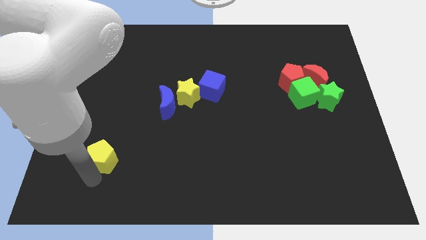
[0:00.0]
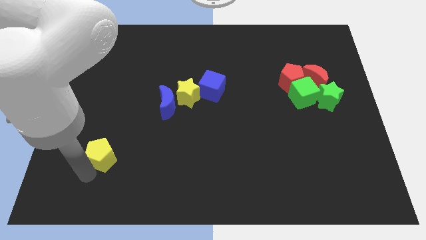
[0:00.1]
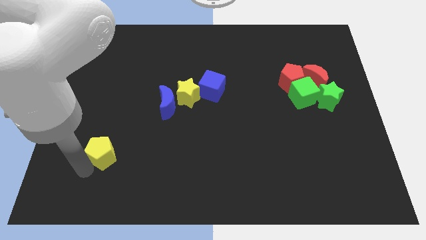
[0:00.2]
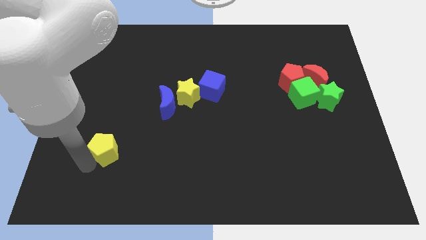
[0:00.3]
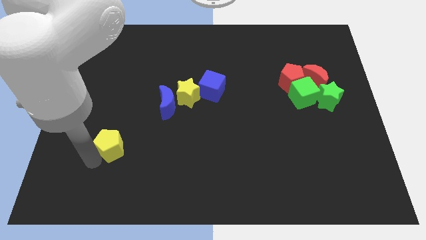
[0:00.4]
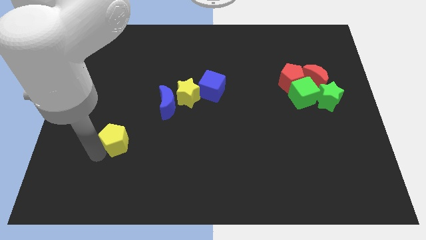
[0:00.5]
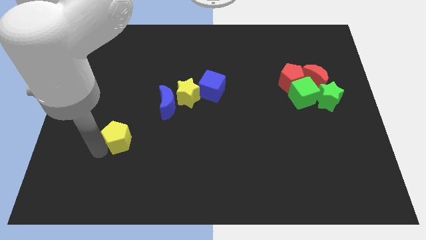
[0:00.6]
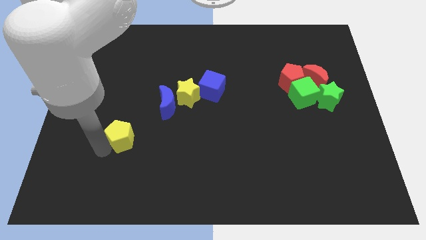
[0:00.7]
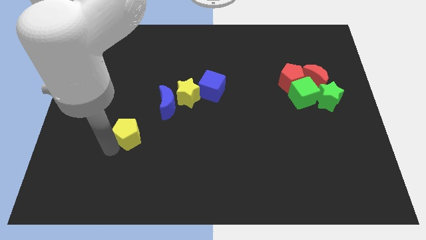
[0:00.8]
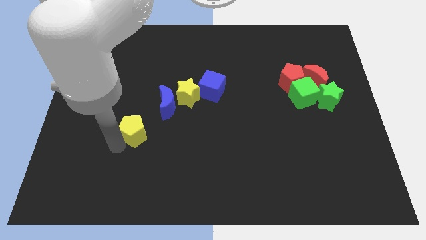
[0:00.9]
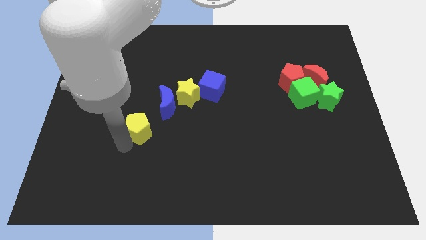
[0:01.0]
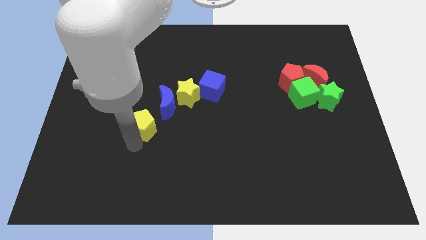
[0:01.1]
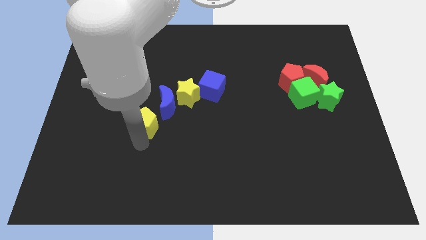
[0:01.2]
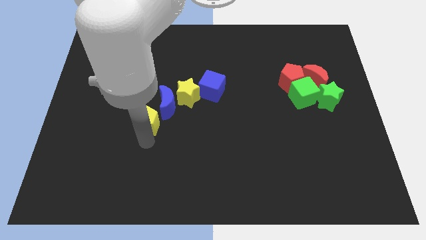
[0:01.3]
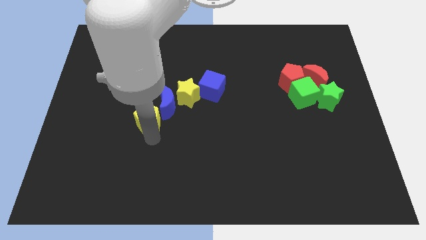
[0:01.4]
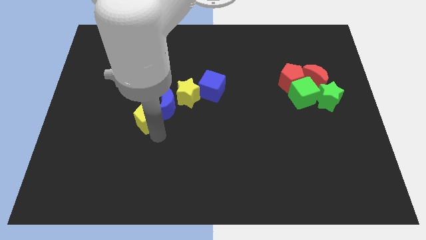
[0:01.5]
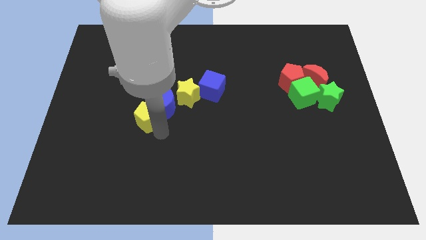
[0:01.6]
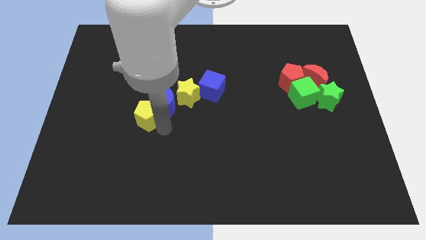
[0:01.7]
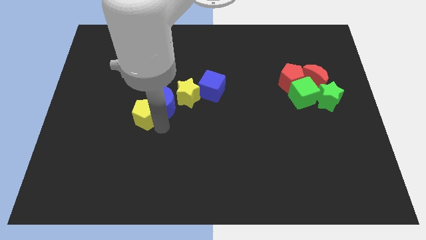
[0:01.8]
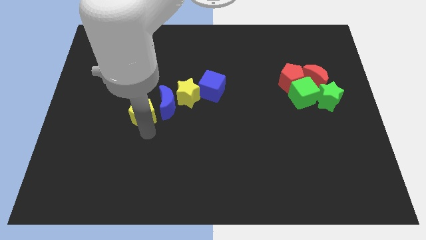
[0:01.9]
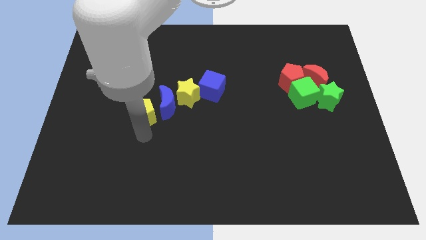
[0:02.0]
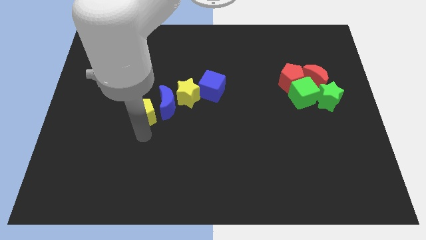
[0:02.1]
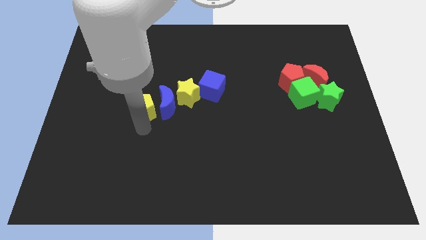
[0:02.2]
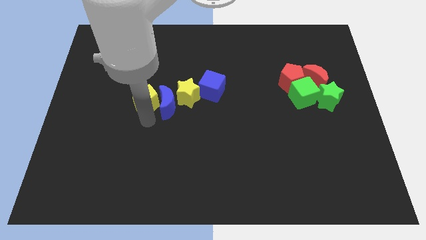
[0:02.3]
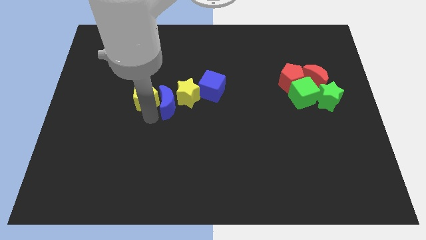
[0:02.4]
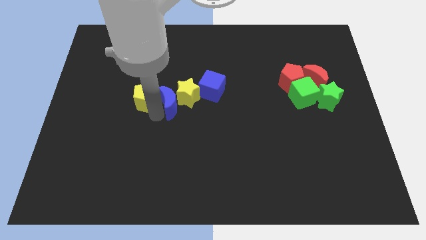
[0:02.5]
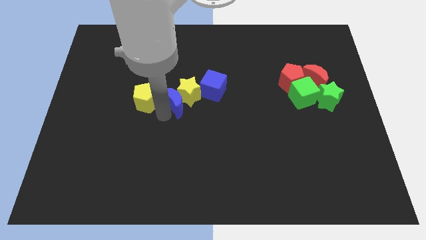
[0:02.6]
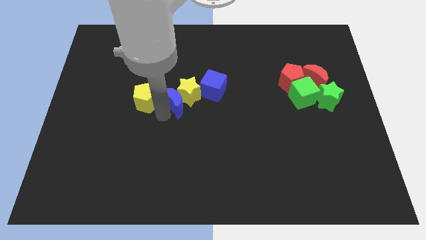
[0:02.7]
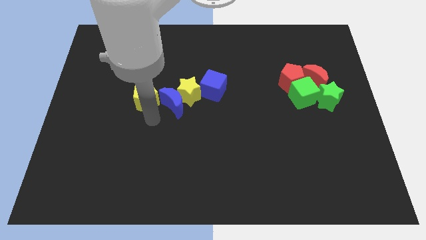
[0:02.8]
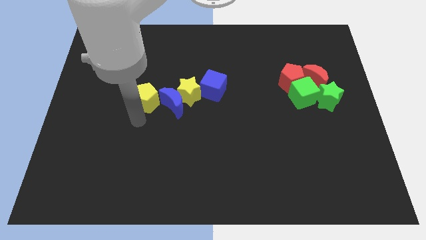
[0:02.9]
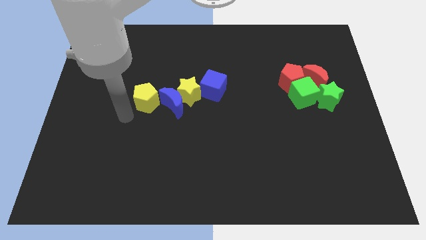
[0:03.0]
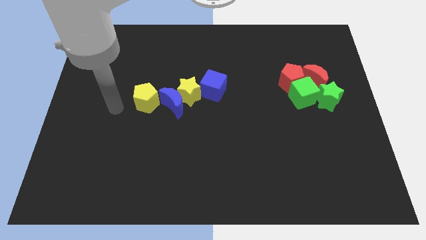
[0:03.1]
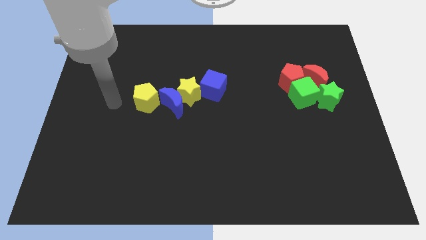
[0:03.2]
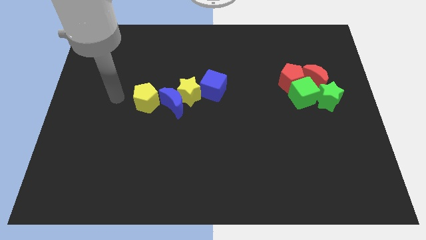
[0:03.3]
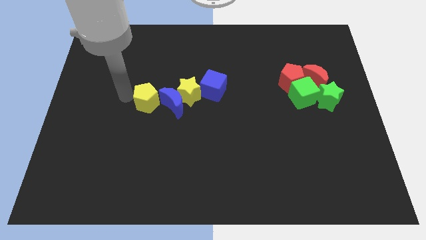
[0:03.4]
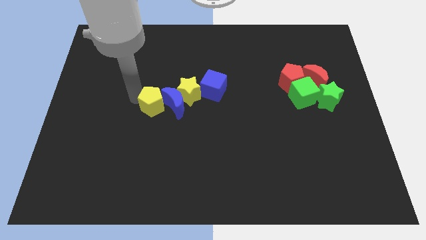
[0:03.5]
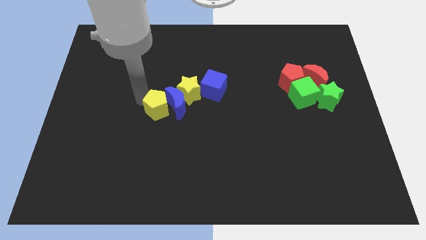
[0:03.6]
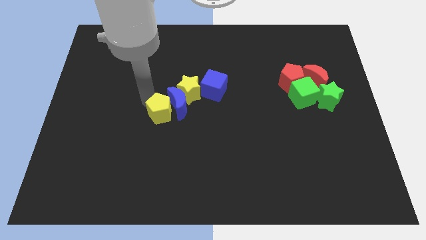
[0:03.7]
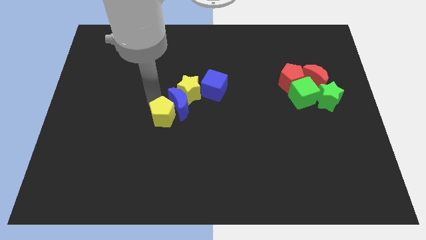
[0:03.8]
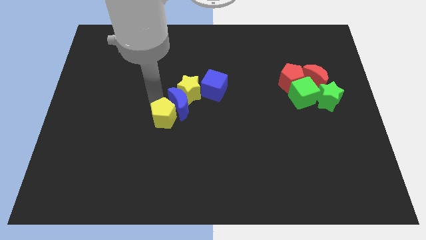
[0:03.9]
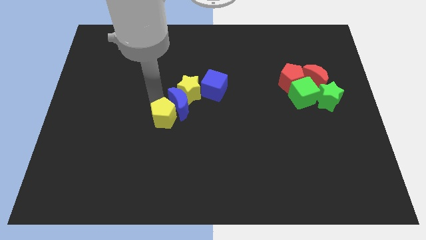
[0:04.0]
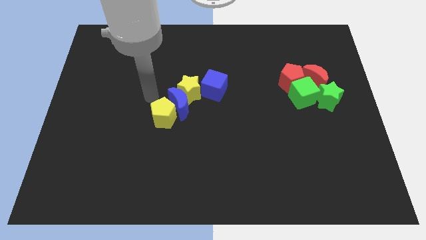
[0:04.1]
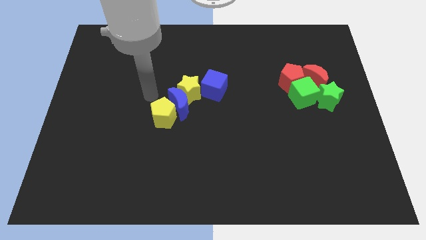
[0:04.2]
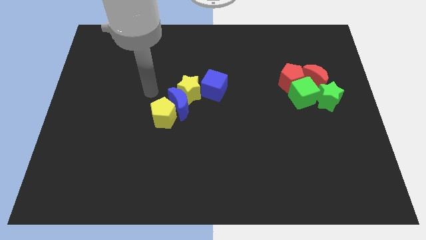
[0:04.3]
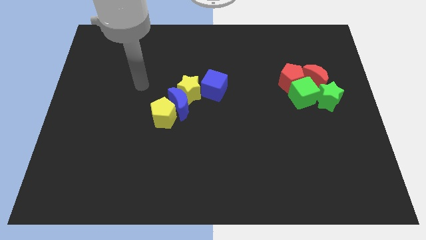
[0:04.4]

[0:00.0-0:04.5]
place the yellow pentagon at the bottom left of the blue moon

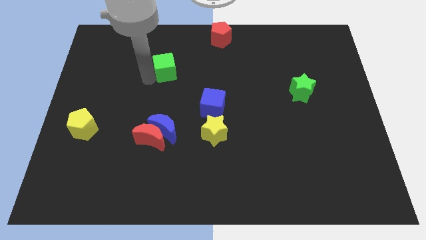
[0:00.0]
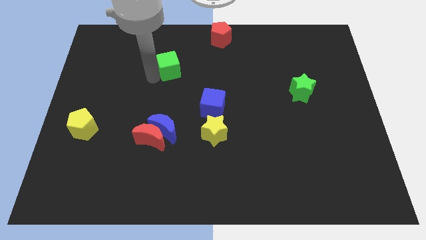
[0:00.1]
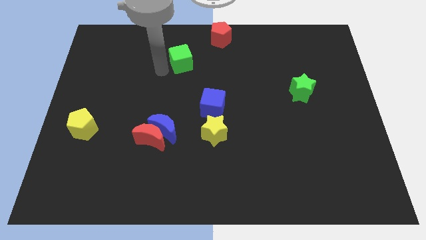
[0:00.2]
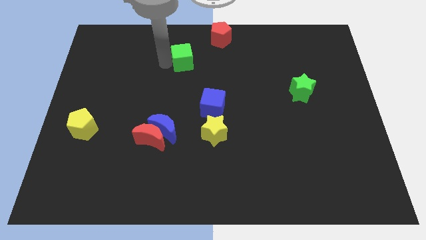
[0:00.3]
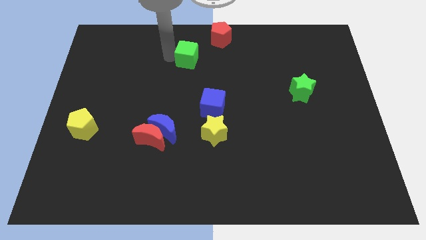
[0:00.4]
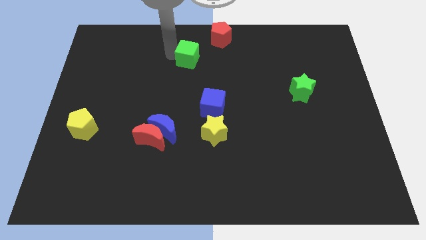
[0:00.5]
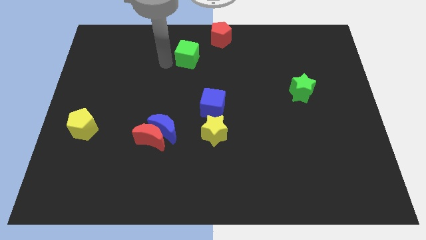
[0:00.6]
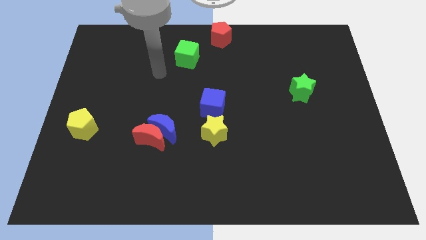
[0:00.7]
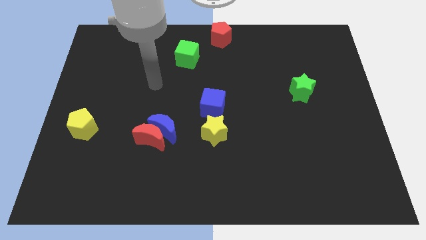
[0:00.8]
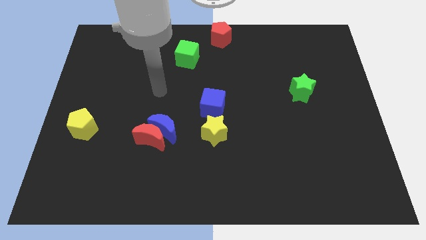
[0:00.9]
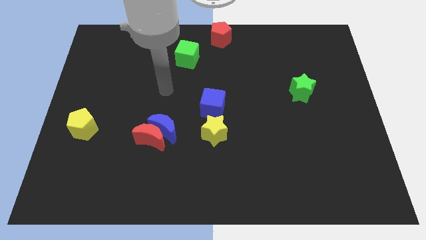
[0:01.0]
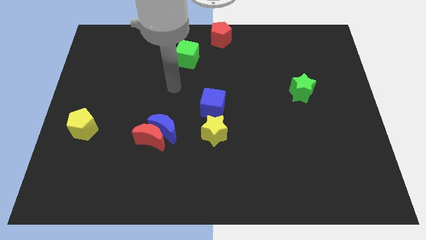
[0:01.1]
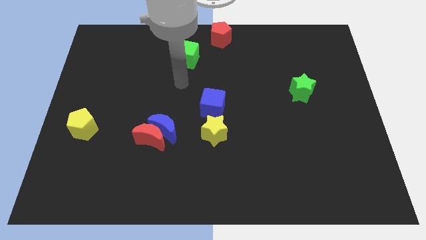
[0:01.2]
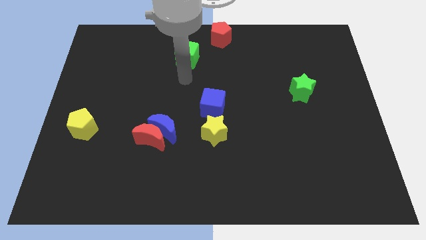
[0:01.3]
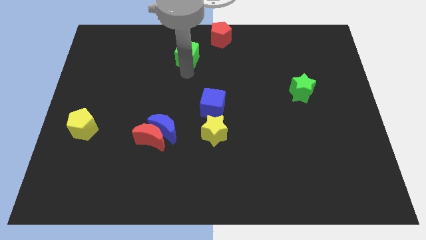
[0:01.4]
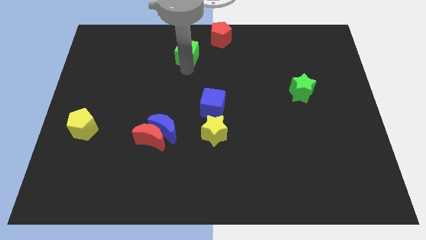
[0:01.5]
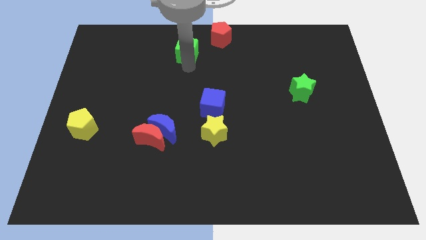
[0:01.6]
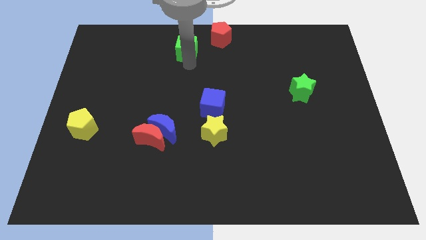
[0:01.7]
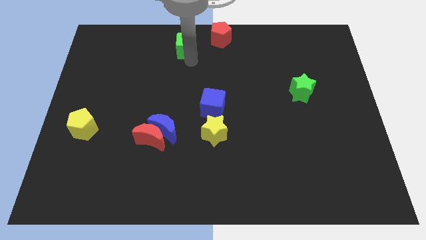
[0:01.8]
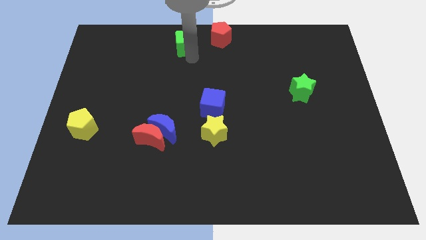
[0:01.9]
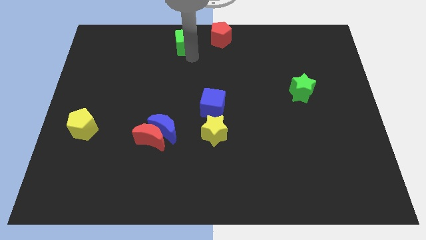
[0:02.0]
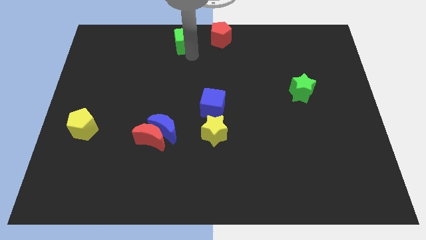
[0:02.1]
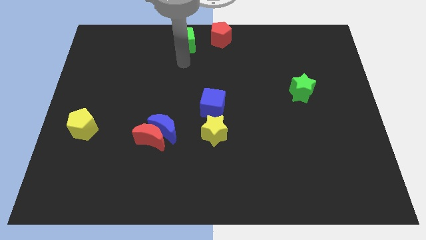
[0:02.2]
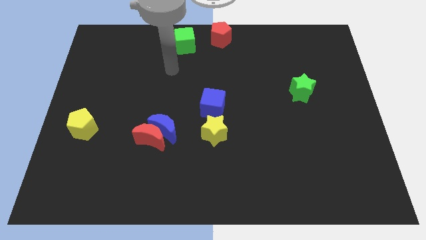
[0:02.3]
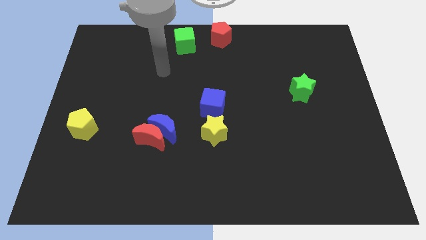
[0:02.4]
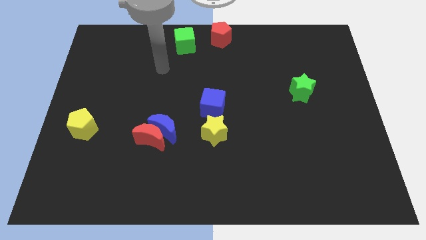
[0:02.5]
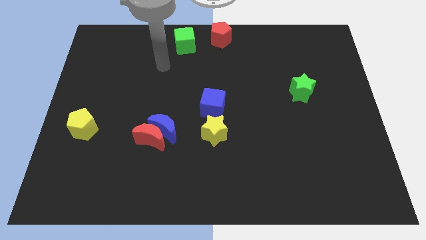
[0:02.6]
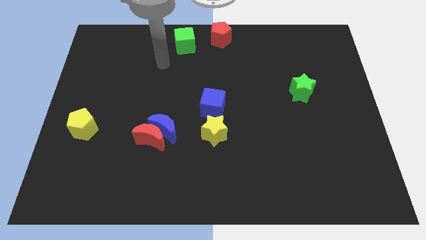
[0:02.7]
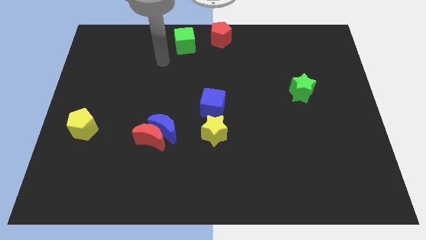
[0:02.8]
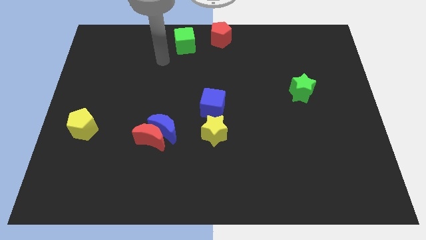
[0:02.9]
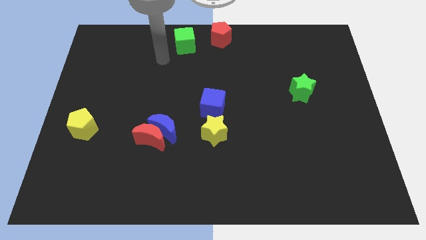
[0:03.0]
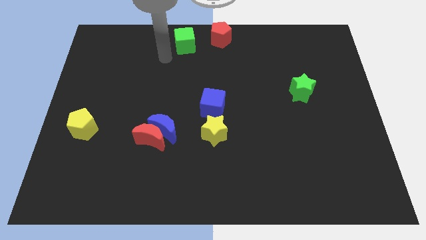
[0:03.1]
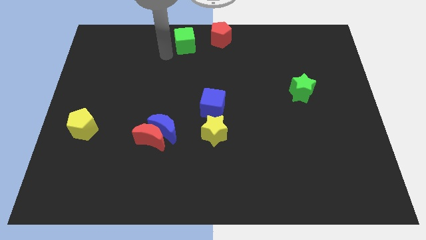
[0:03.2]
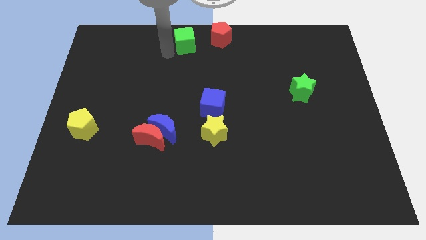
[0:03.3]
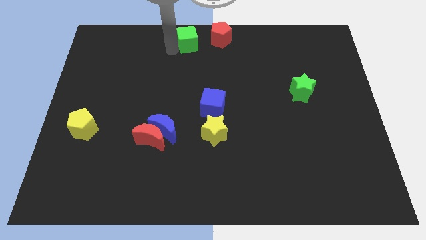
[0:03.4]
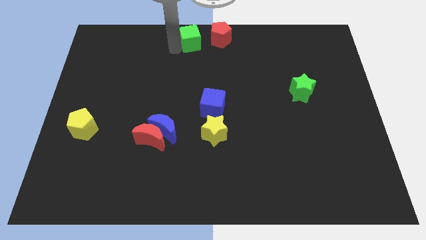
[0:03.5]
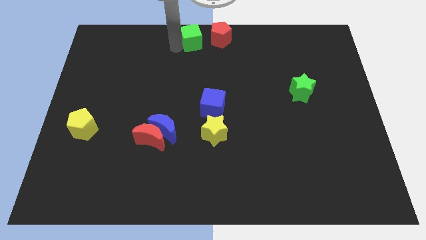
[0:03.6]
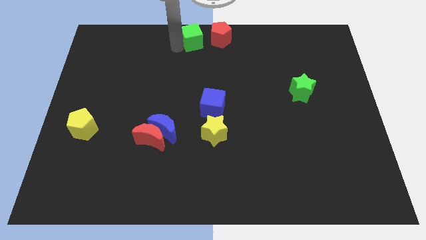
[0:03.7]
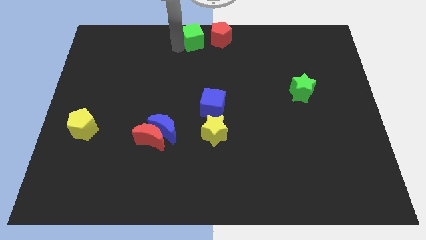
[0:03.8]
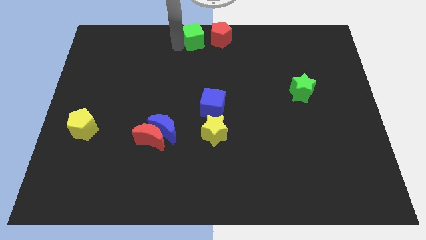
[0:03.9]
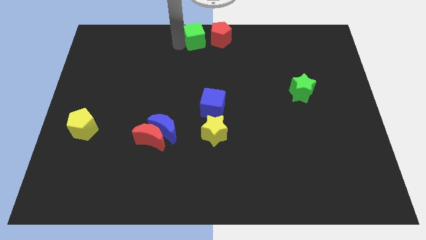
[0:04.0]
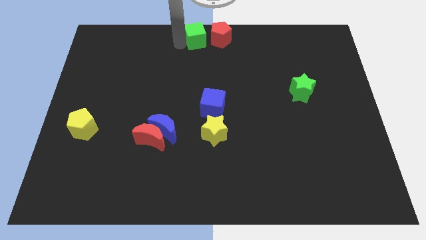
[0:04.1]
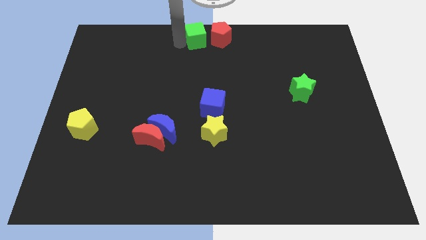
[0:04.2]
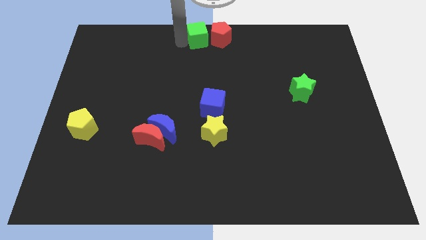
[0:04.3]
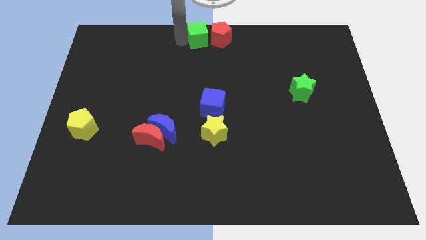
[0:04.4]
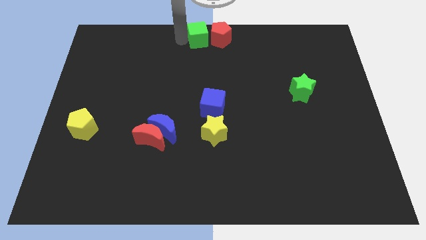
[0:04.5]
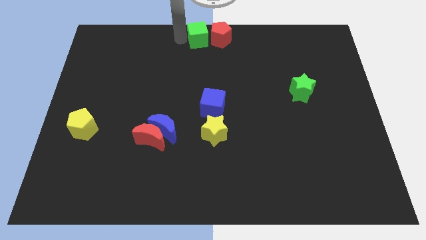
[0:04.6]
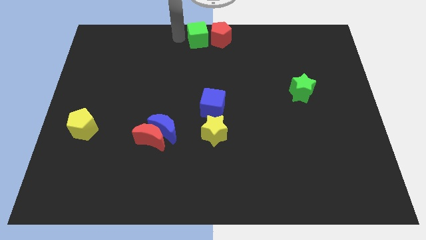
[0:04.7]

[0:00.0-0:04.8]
move the green cube to the top center of the board
